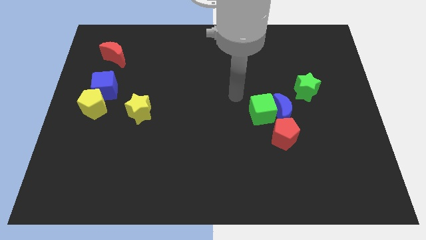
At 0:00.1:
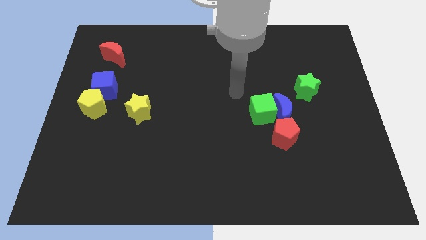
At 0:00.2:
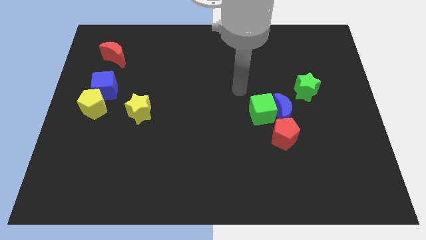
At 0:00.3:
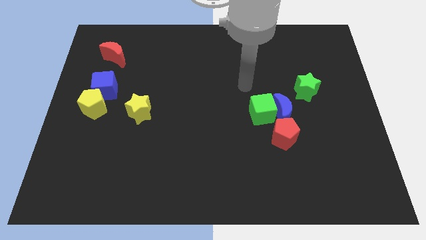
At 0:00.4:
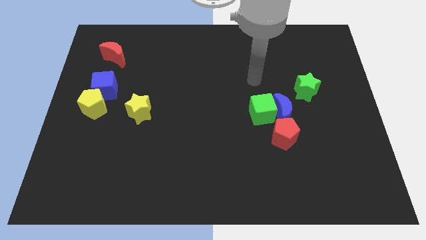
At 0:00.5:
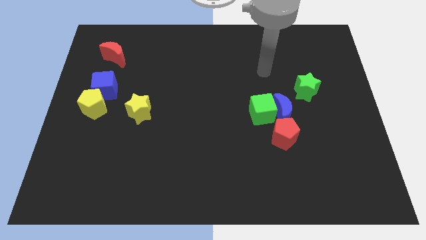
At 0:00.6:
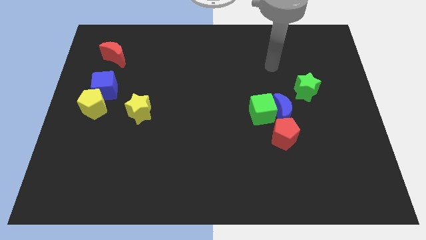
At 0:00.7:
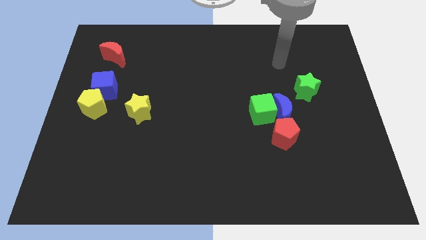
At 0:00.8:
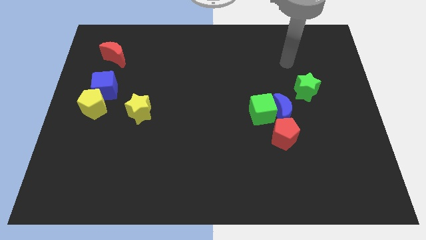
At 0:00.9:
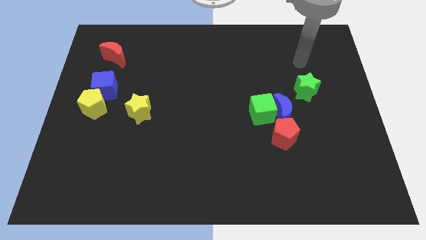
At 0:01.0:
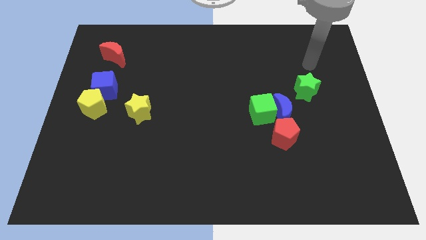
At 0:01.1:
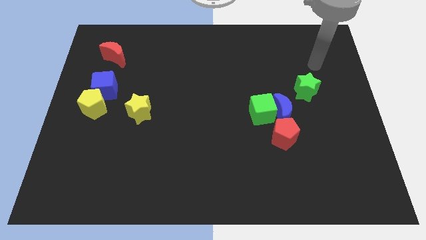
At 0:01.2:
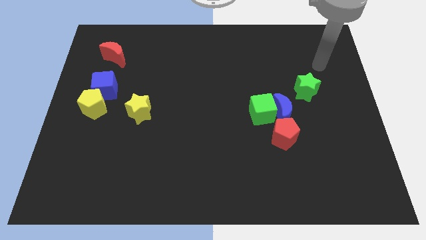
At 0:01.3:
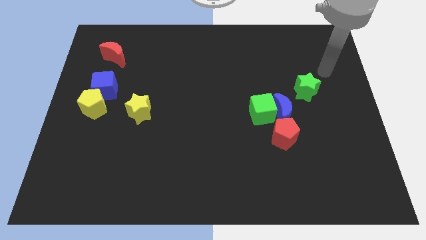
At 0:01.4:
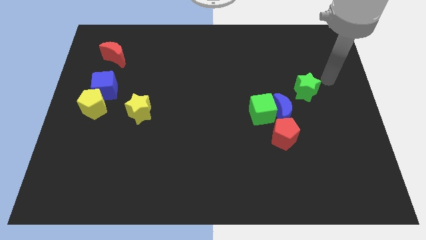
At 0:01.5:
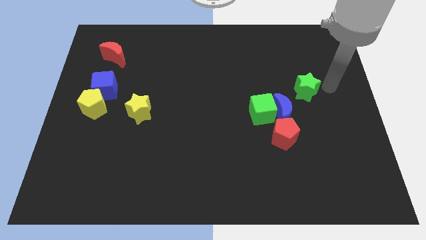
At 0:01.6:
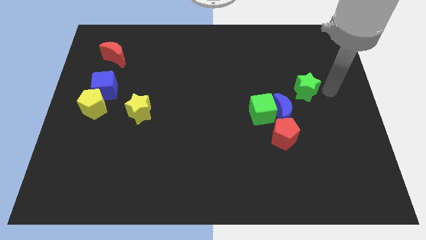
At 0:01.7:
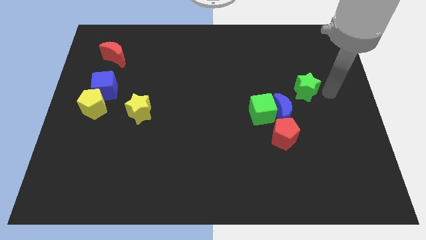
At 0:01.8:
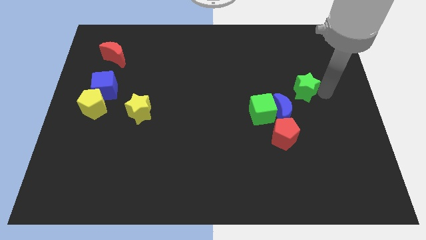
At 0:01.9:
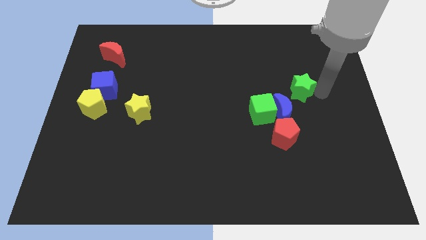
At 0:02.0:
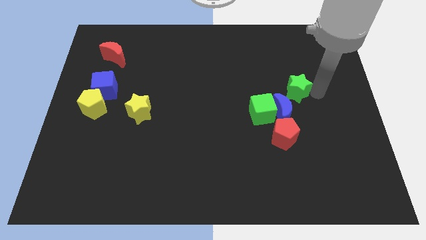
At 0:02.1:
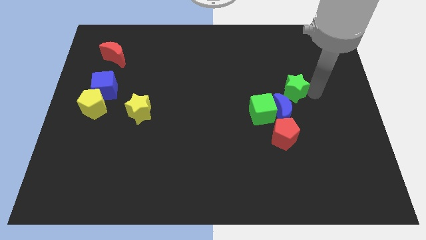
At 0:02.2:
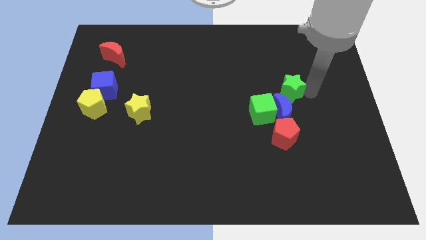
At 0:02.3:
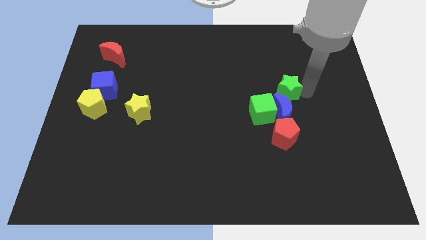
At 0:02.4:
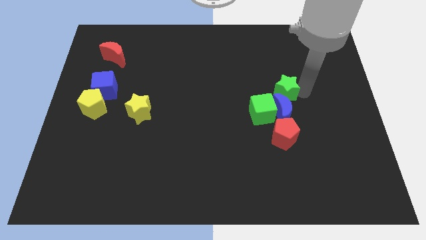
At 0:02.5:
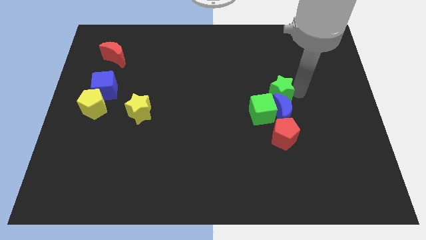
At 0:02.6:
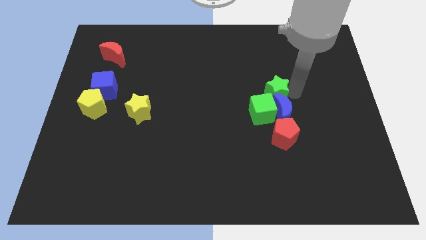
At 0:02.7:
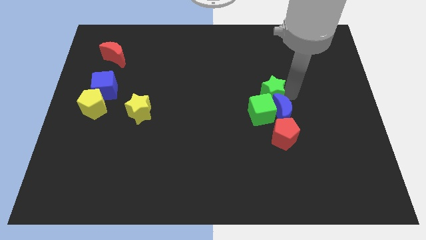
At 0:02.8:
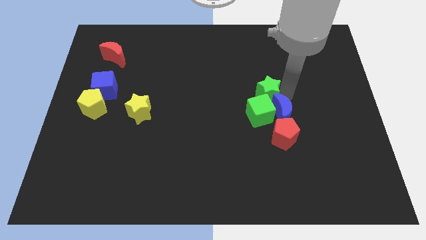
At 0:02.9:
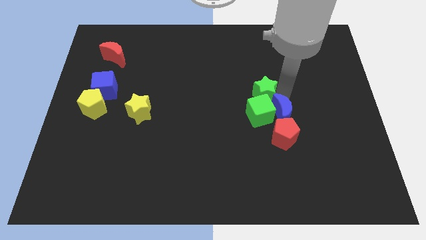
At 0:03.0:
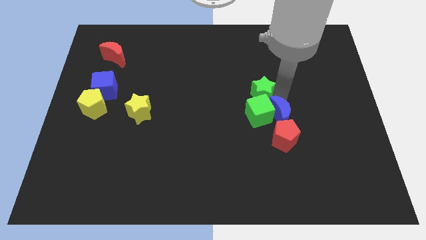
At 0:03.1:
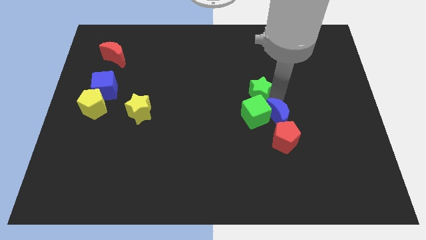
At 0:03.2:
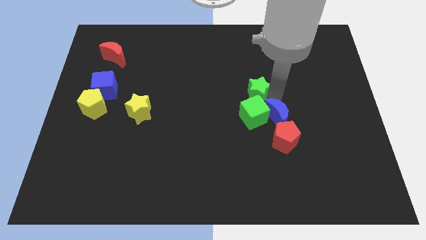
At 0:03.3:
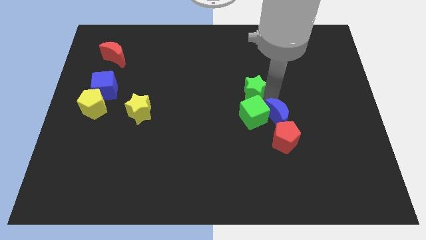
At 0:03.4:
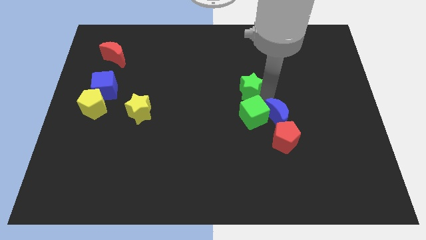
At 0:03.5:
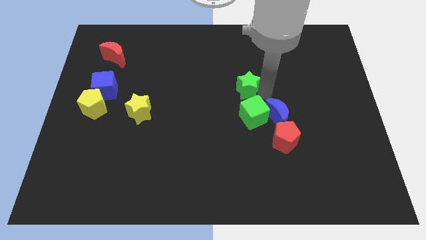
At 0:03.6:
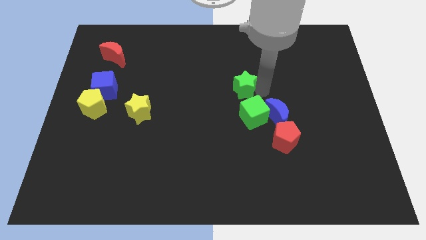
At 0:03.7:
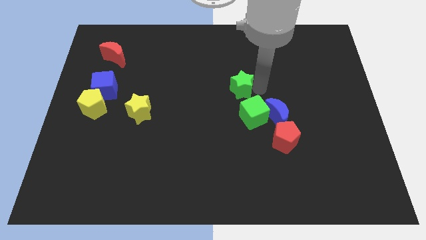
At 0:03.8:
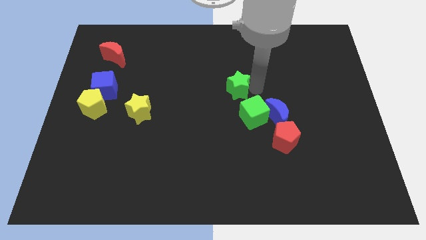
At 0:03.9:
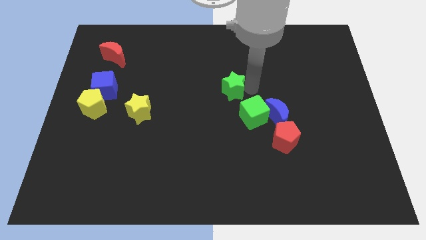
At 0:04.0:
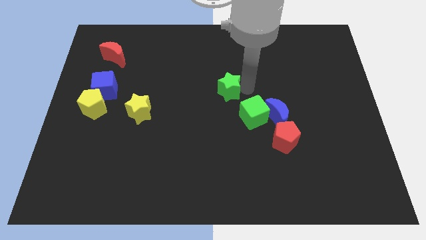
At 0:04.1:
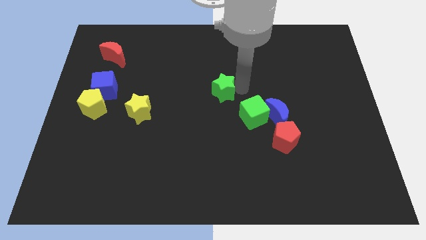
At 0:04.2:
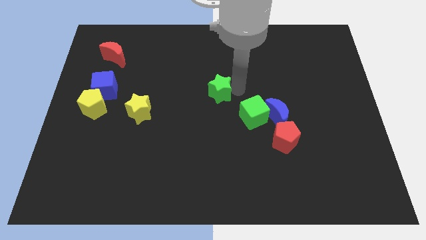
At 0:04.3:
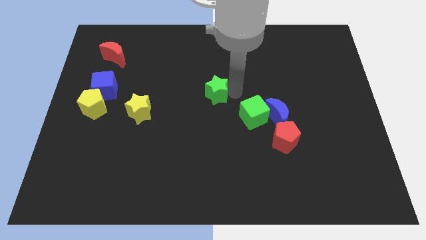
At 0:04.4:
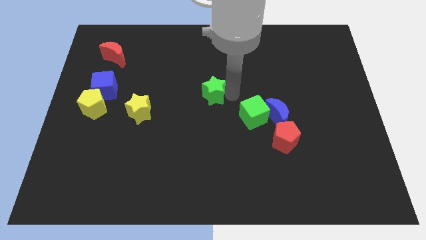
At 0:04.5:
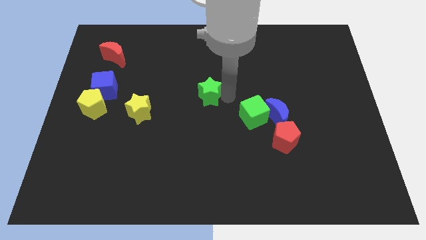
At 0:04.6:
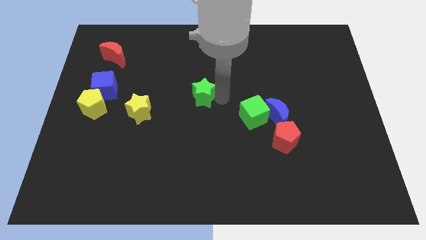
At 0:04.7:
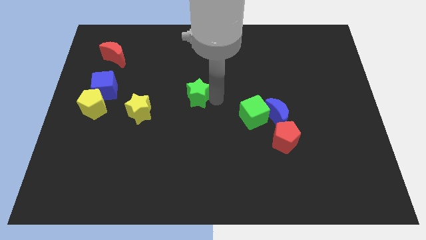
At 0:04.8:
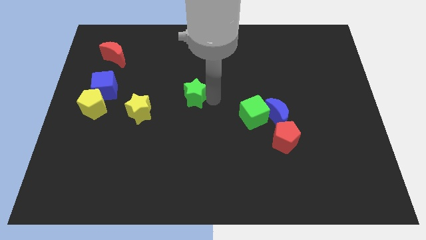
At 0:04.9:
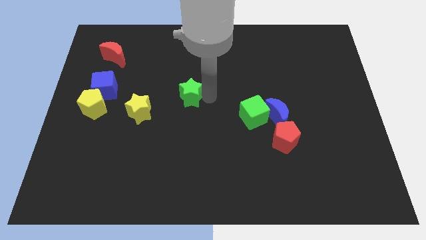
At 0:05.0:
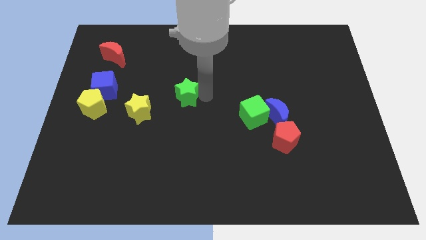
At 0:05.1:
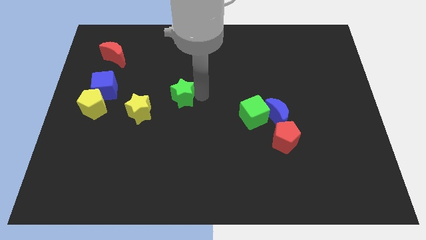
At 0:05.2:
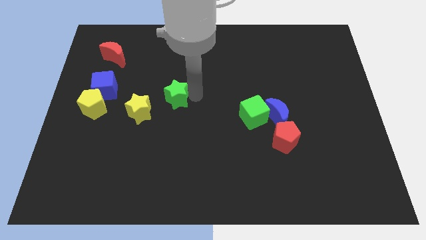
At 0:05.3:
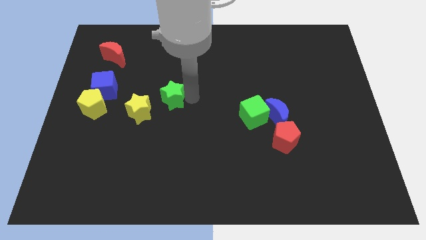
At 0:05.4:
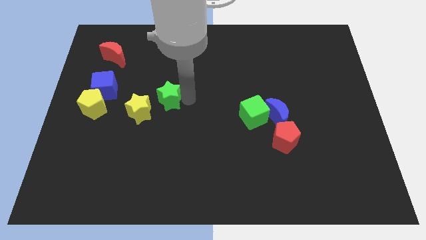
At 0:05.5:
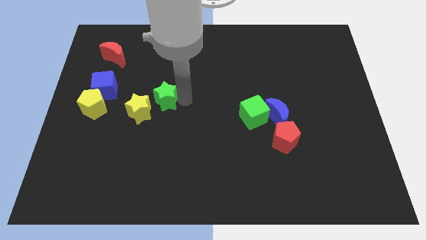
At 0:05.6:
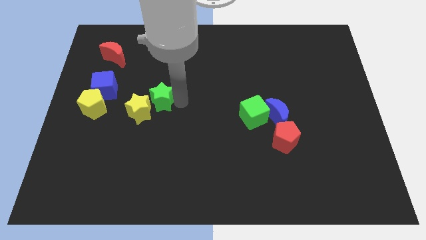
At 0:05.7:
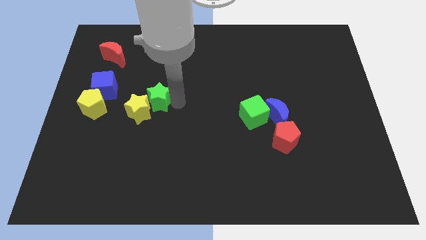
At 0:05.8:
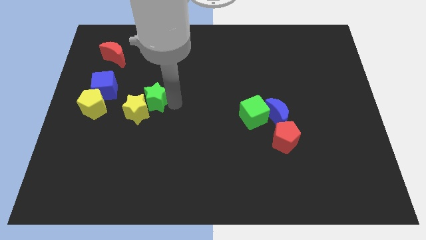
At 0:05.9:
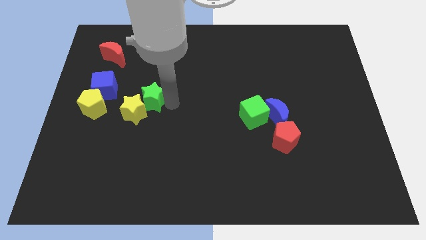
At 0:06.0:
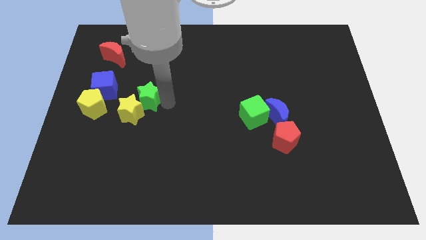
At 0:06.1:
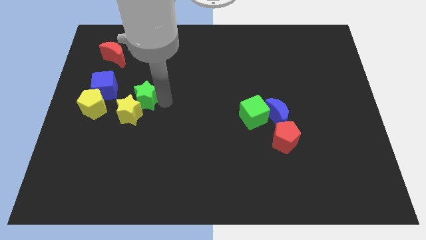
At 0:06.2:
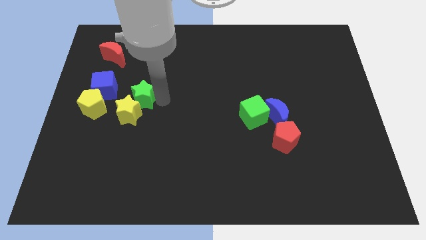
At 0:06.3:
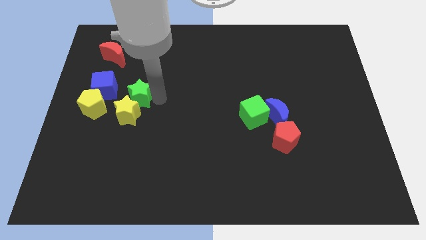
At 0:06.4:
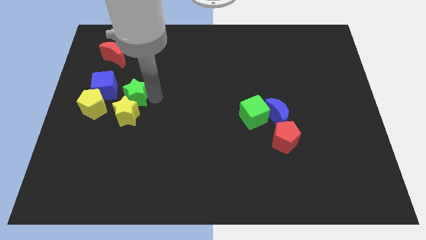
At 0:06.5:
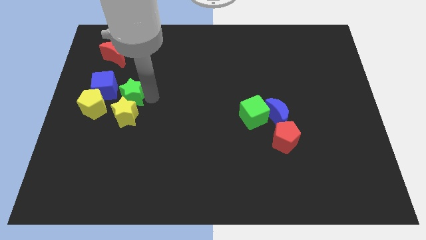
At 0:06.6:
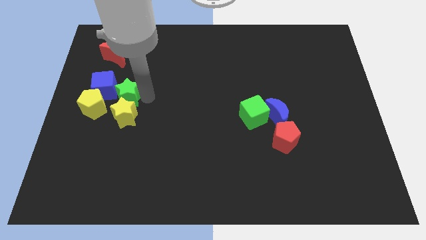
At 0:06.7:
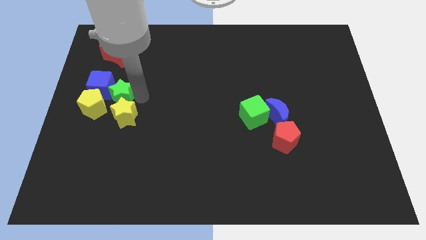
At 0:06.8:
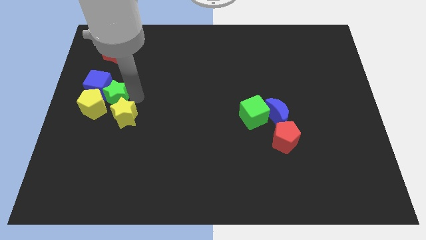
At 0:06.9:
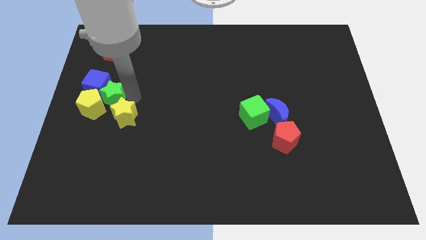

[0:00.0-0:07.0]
move the green star to the blue cube

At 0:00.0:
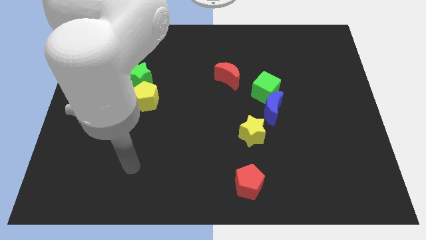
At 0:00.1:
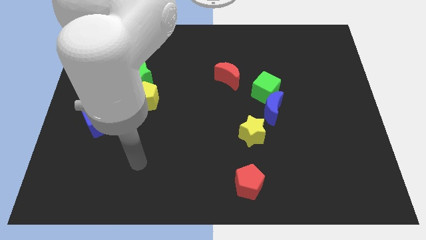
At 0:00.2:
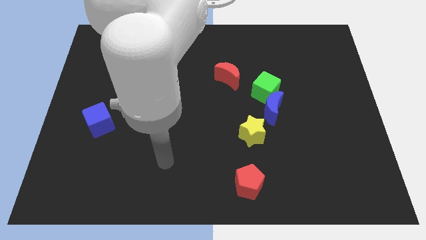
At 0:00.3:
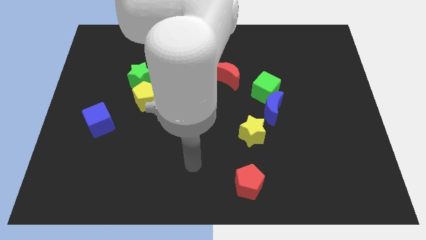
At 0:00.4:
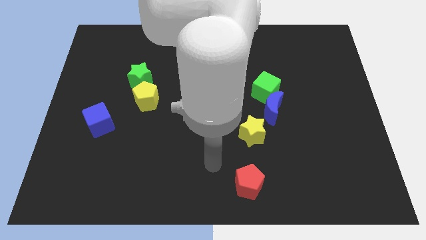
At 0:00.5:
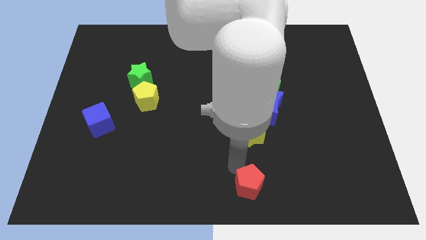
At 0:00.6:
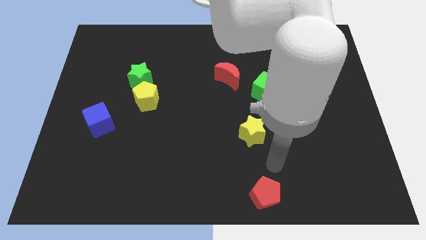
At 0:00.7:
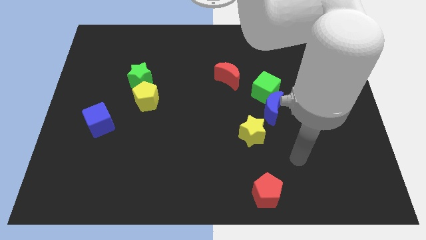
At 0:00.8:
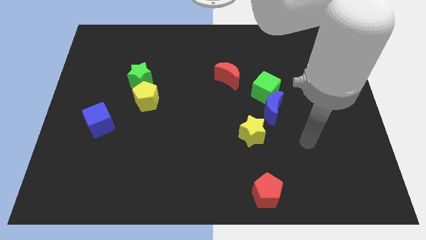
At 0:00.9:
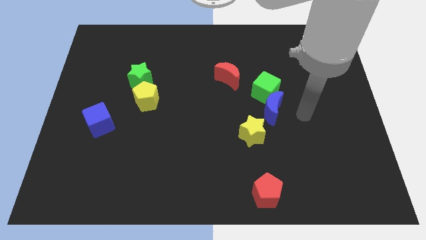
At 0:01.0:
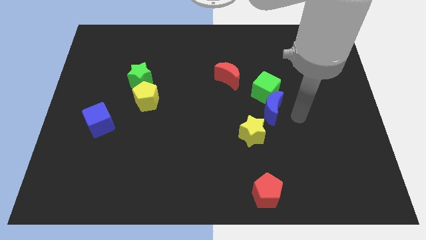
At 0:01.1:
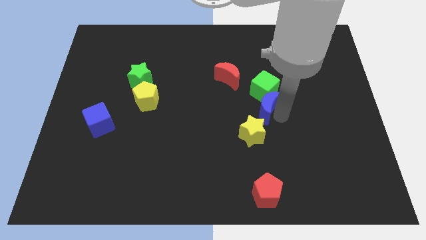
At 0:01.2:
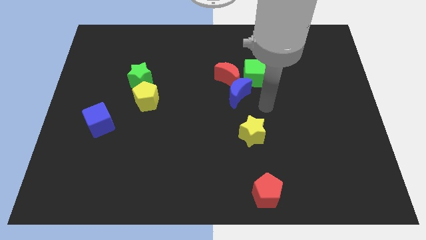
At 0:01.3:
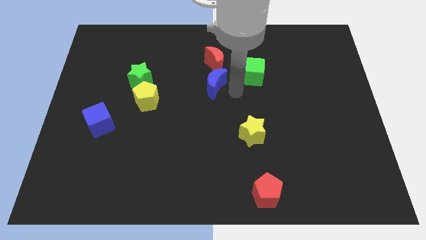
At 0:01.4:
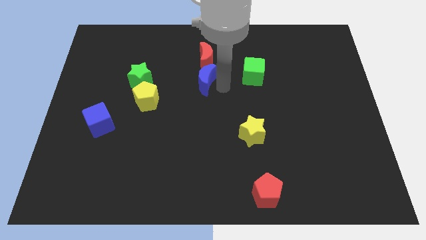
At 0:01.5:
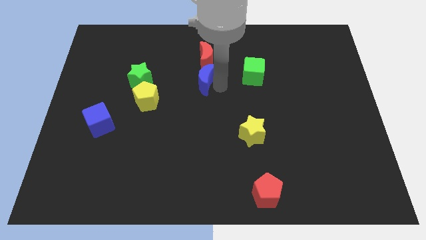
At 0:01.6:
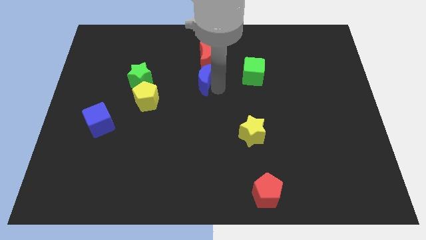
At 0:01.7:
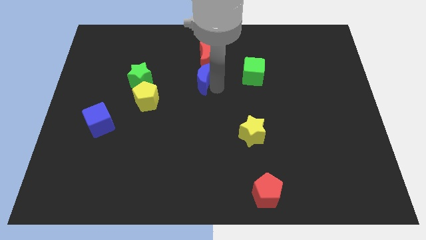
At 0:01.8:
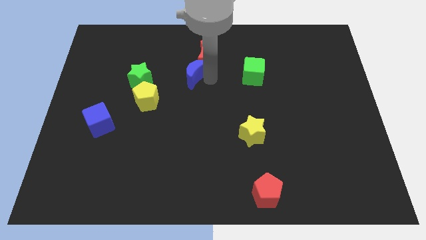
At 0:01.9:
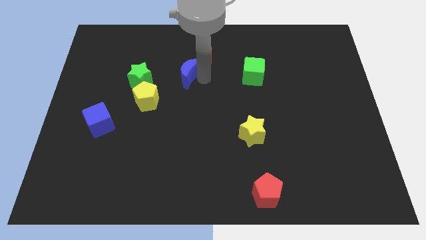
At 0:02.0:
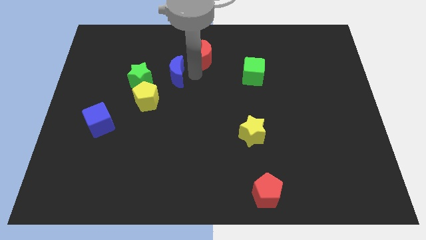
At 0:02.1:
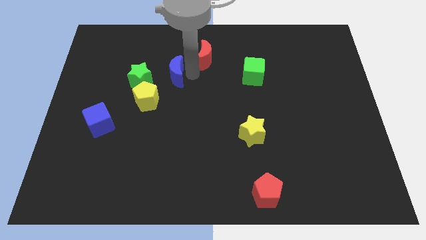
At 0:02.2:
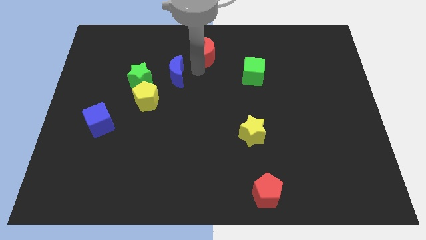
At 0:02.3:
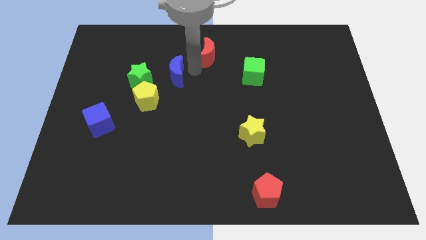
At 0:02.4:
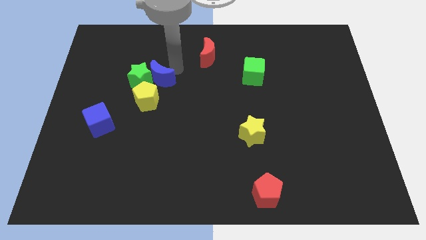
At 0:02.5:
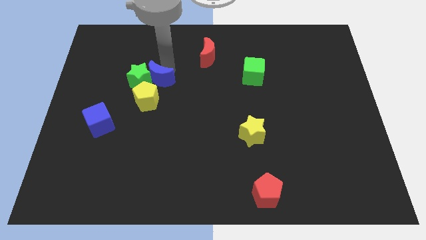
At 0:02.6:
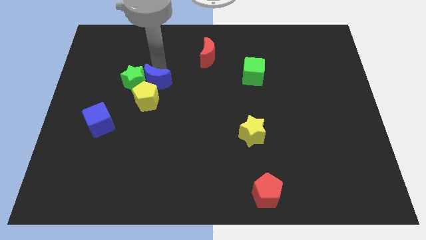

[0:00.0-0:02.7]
move the blue moon to the green star
